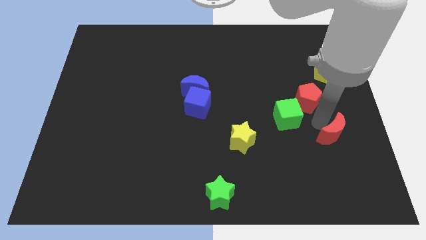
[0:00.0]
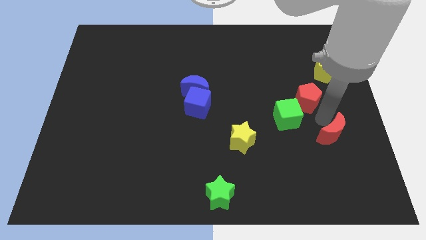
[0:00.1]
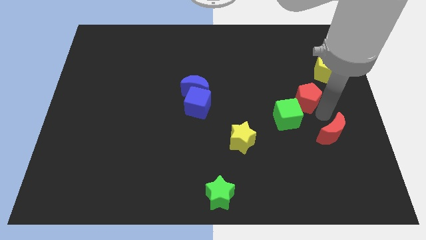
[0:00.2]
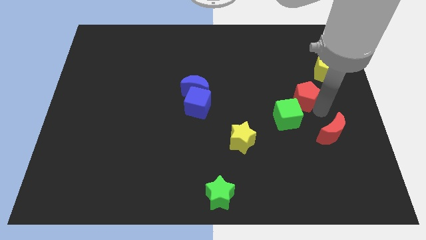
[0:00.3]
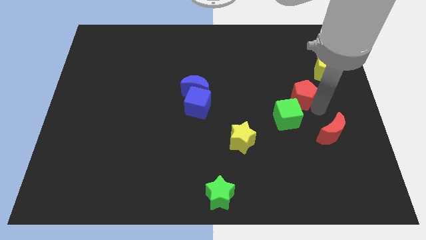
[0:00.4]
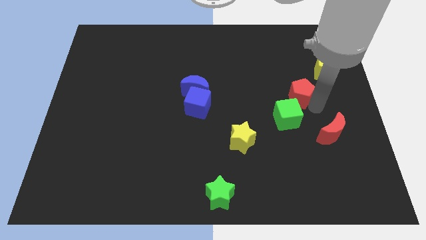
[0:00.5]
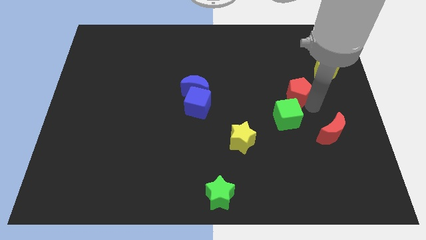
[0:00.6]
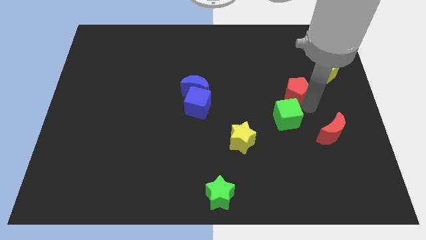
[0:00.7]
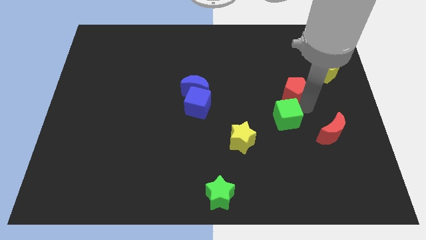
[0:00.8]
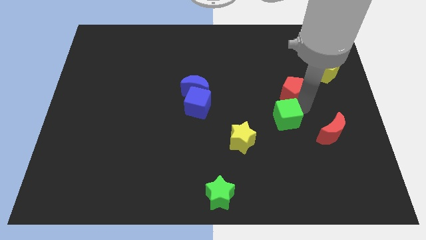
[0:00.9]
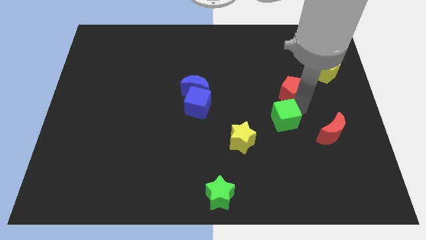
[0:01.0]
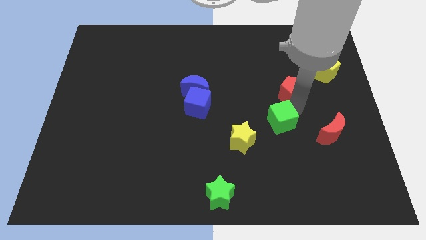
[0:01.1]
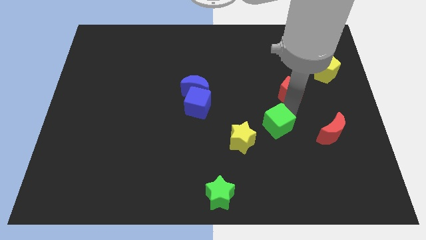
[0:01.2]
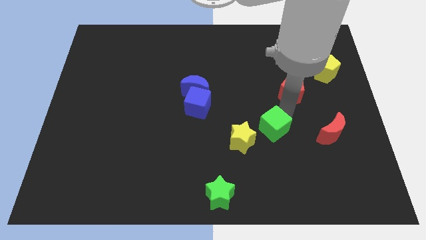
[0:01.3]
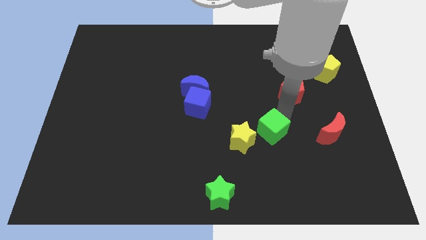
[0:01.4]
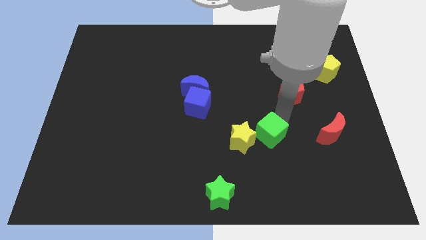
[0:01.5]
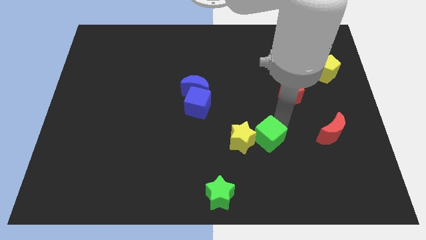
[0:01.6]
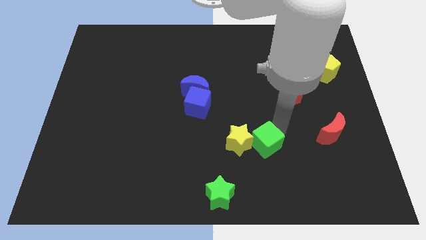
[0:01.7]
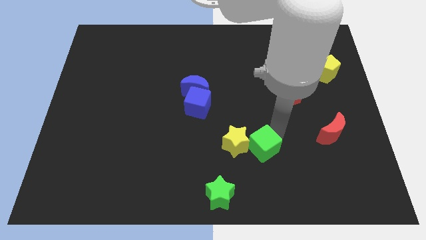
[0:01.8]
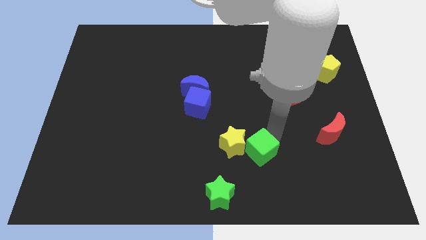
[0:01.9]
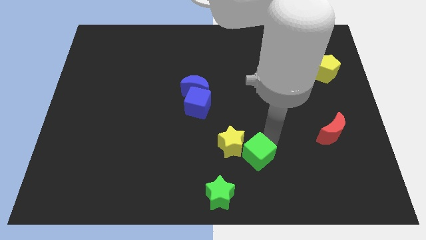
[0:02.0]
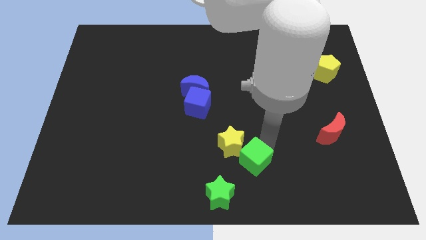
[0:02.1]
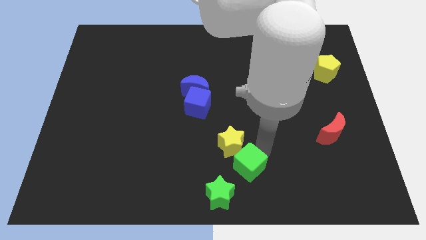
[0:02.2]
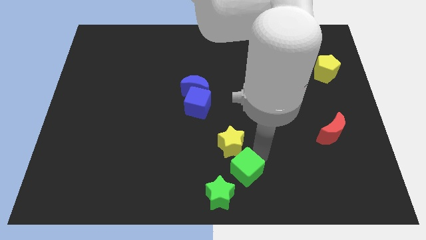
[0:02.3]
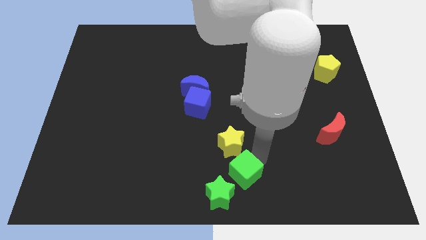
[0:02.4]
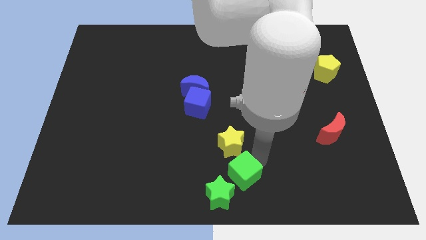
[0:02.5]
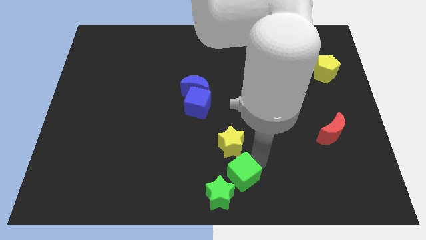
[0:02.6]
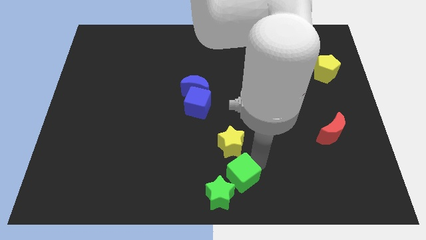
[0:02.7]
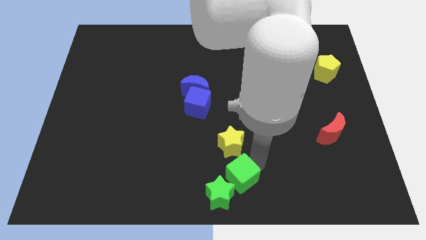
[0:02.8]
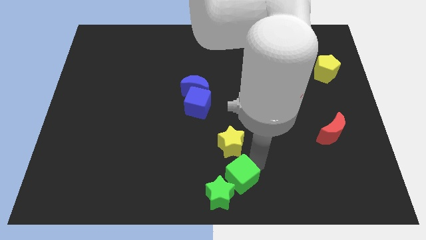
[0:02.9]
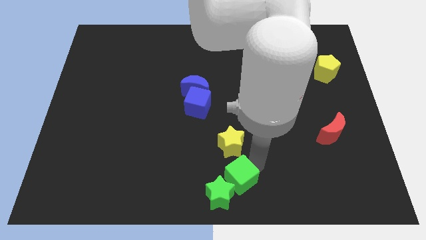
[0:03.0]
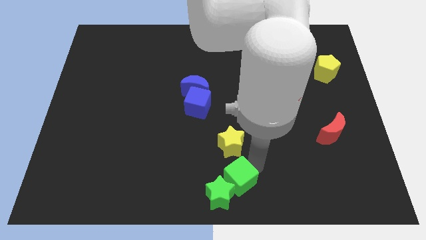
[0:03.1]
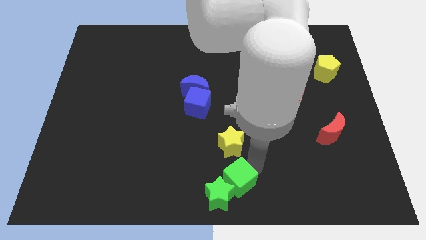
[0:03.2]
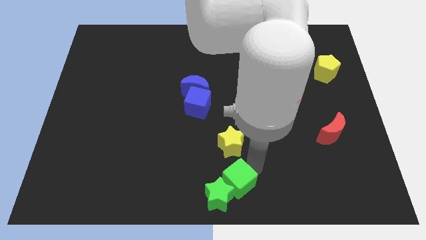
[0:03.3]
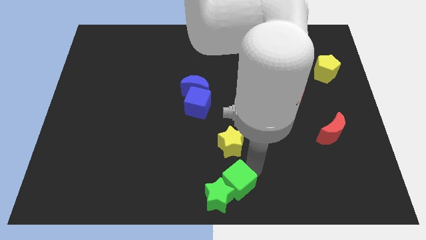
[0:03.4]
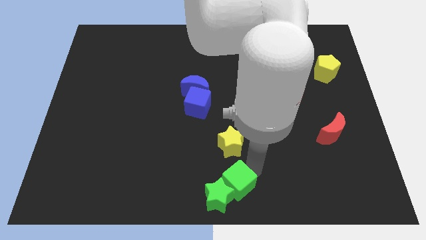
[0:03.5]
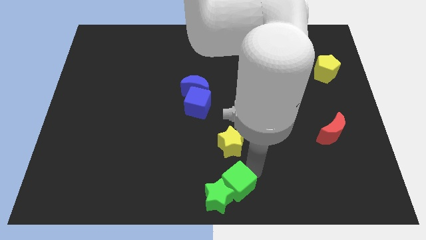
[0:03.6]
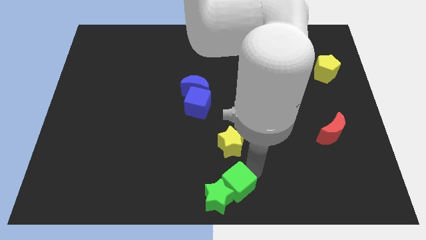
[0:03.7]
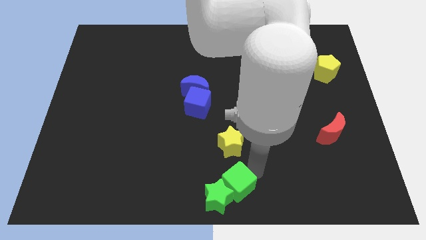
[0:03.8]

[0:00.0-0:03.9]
move green cube into green star

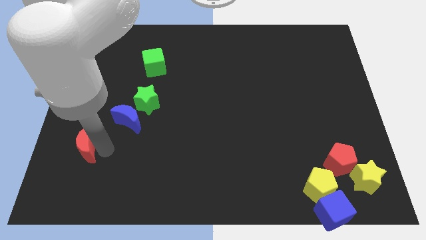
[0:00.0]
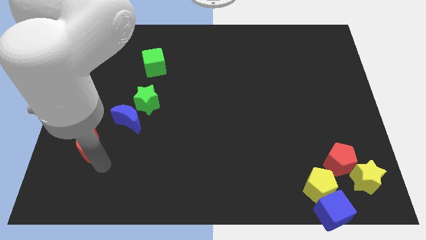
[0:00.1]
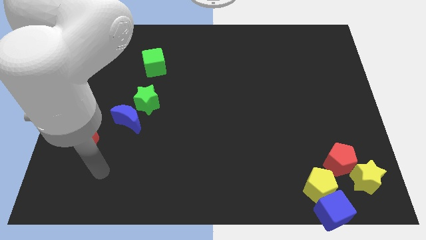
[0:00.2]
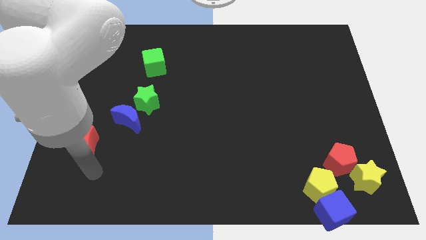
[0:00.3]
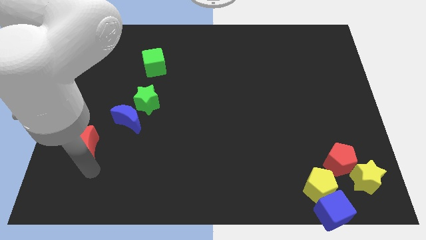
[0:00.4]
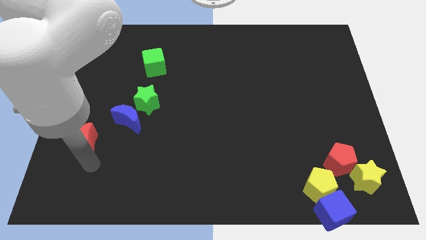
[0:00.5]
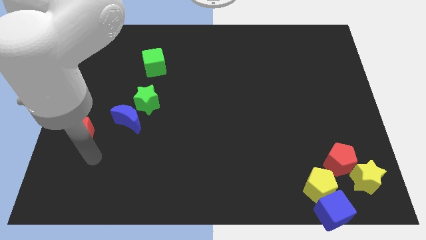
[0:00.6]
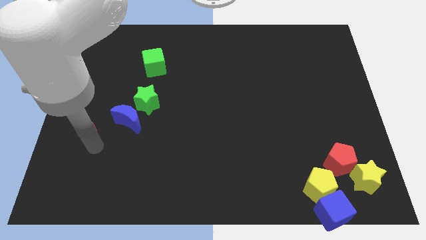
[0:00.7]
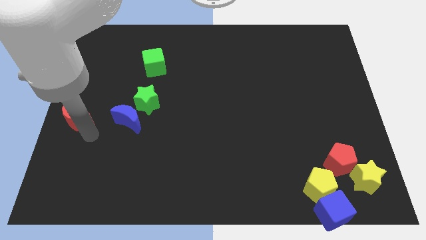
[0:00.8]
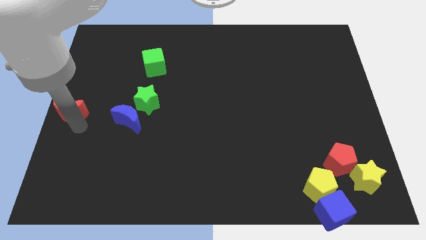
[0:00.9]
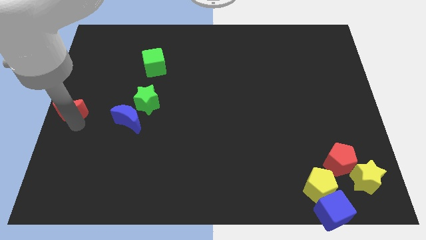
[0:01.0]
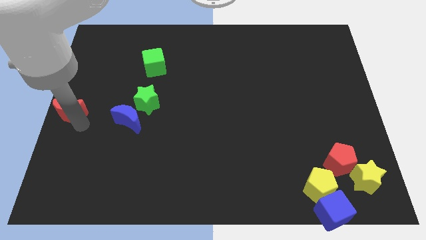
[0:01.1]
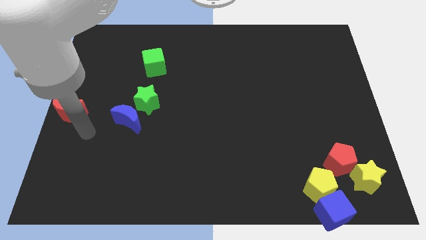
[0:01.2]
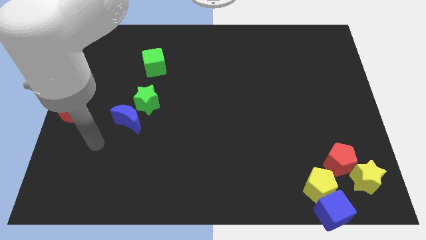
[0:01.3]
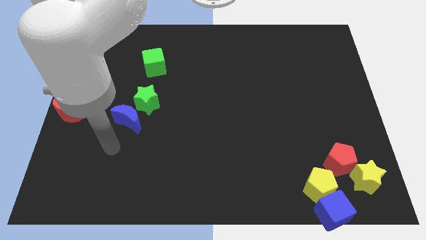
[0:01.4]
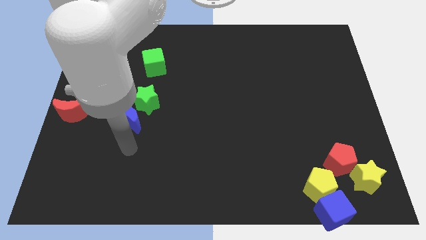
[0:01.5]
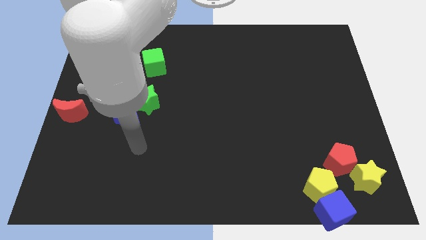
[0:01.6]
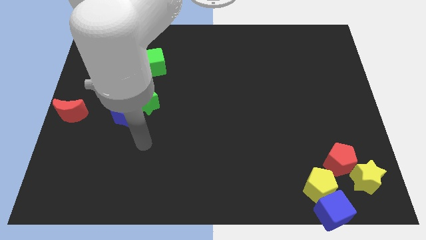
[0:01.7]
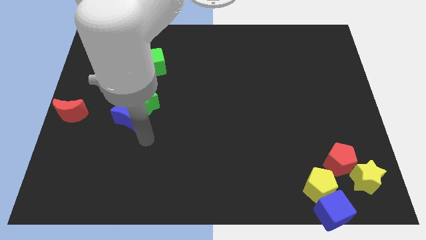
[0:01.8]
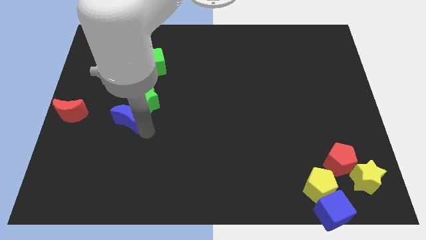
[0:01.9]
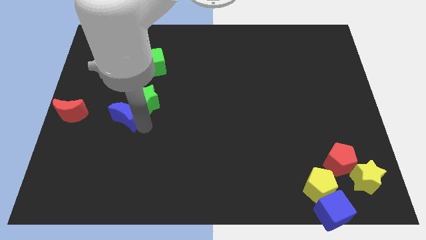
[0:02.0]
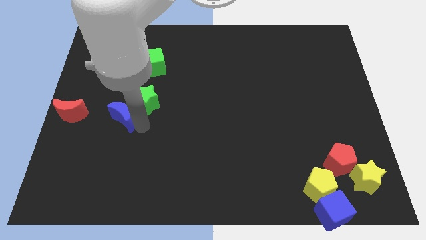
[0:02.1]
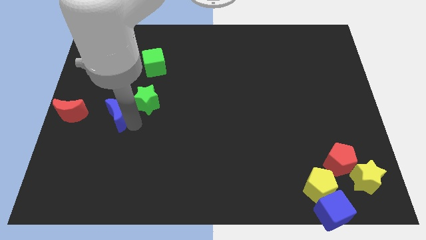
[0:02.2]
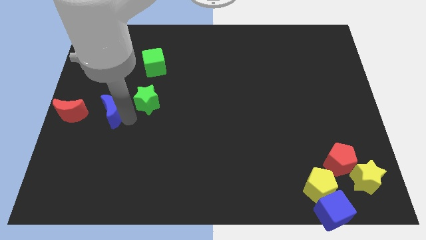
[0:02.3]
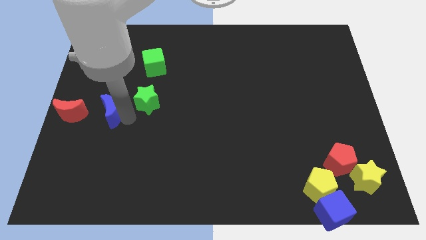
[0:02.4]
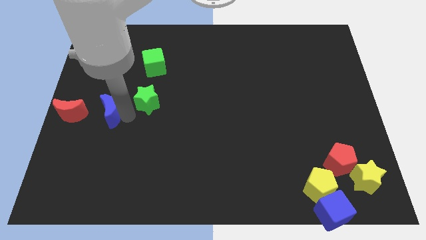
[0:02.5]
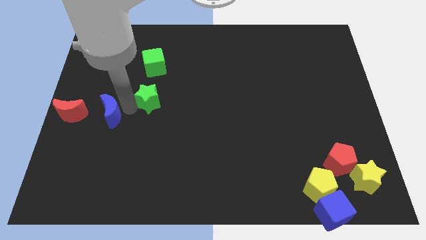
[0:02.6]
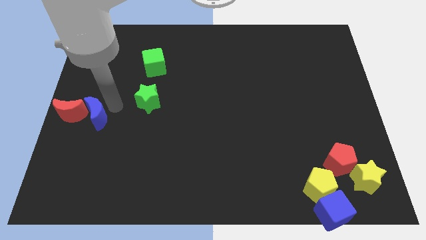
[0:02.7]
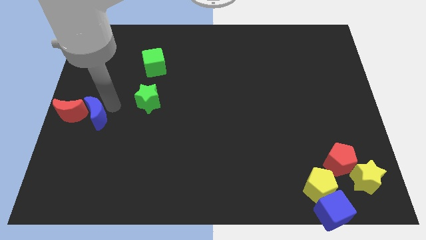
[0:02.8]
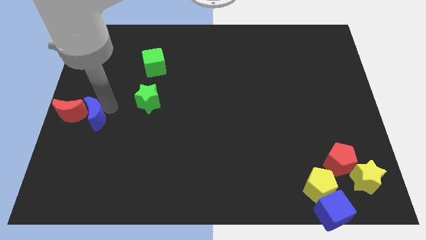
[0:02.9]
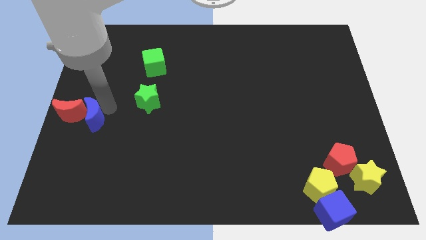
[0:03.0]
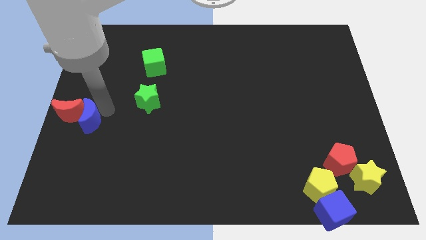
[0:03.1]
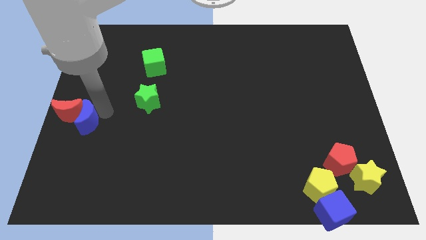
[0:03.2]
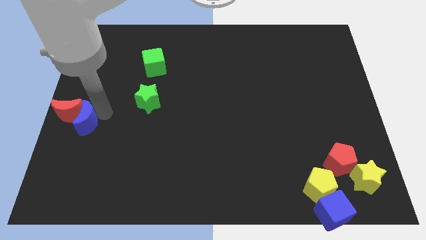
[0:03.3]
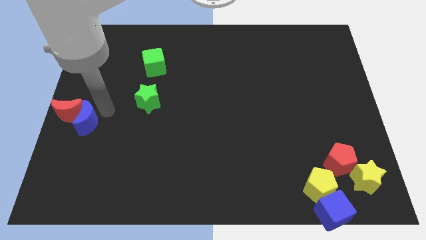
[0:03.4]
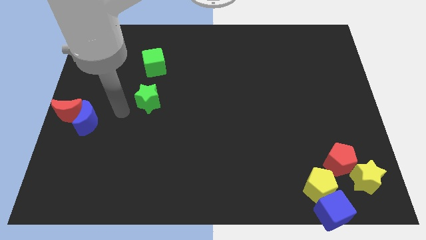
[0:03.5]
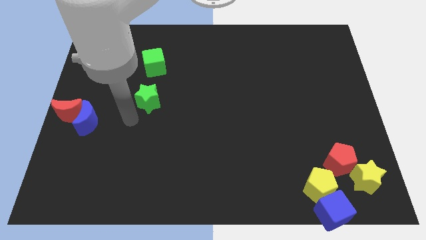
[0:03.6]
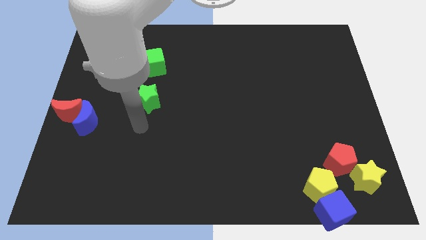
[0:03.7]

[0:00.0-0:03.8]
push the blue moon right to the red moon

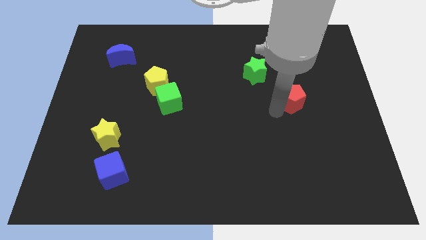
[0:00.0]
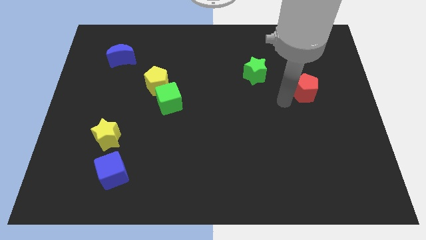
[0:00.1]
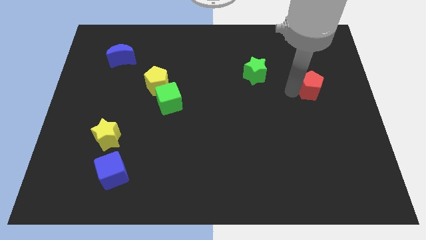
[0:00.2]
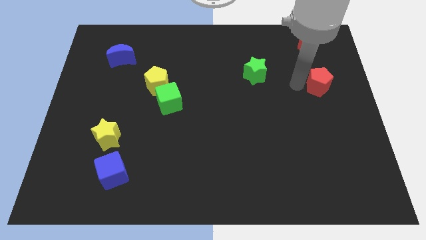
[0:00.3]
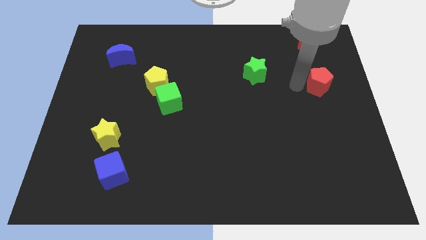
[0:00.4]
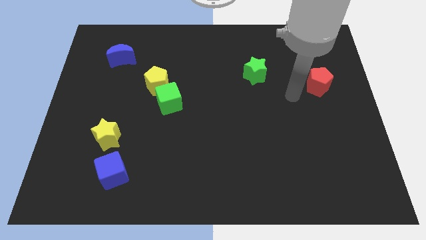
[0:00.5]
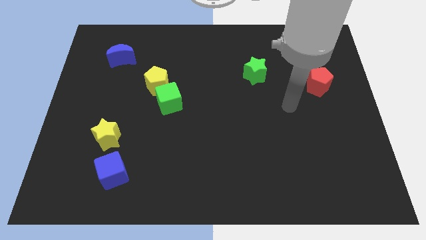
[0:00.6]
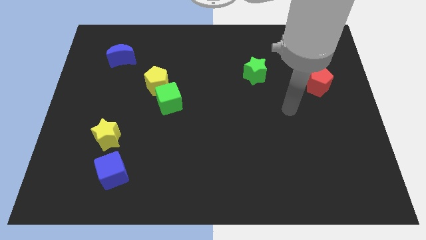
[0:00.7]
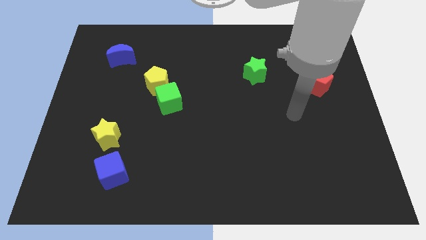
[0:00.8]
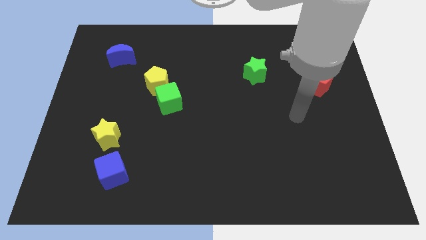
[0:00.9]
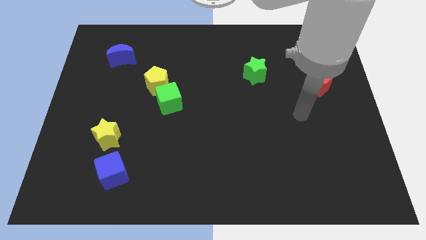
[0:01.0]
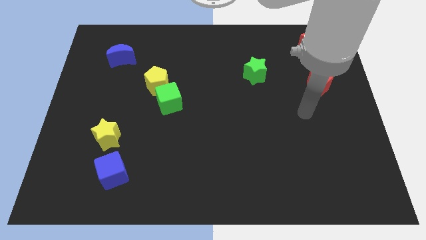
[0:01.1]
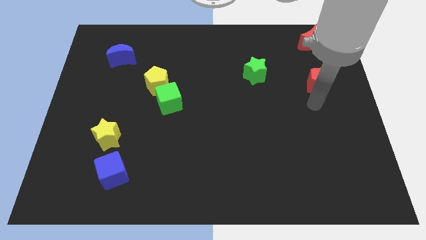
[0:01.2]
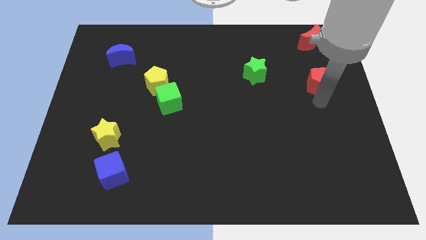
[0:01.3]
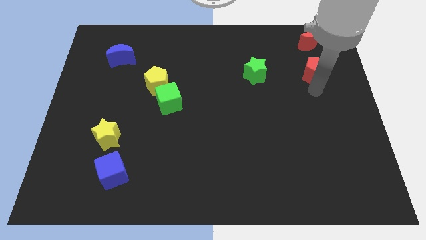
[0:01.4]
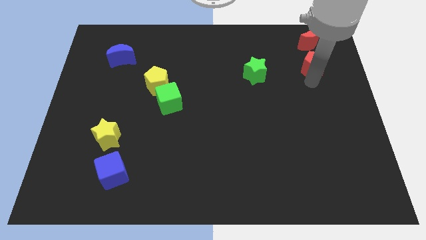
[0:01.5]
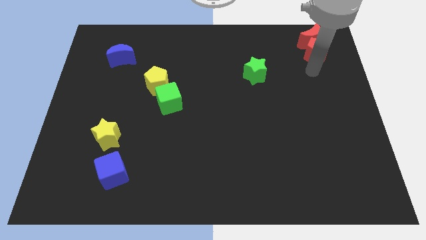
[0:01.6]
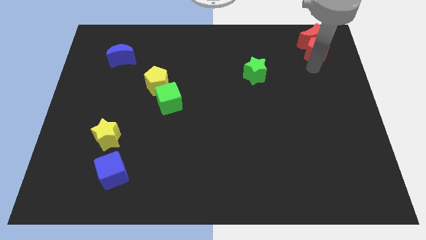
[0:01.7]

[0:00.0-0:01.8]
place red pentagon below red crescent
